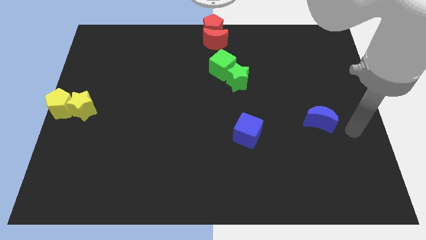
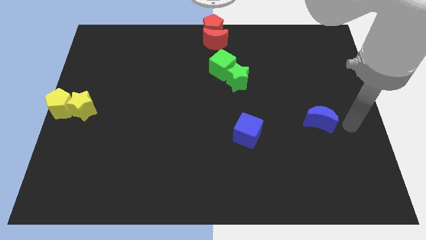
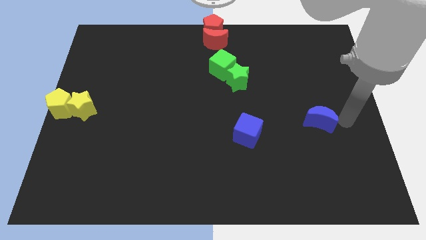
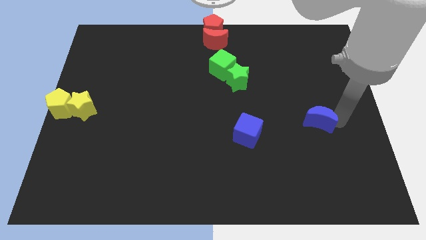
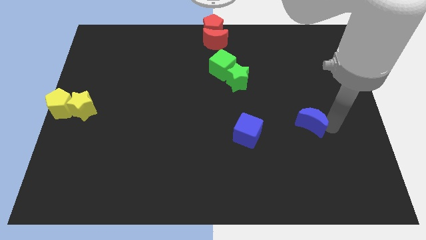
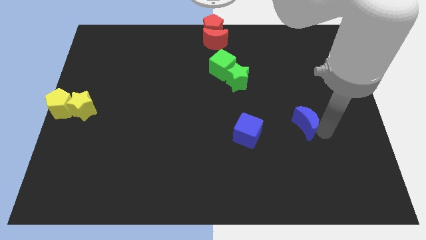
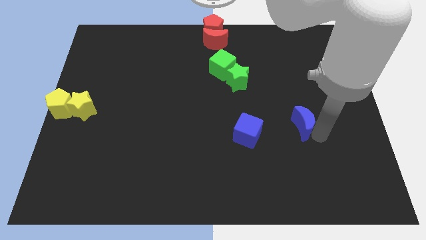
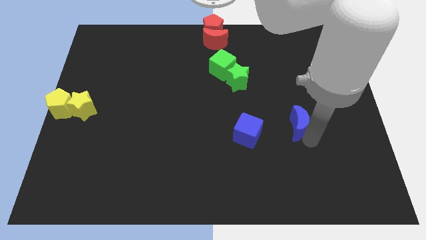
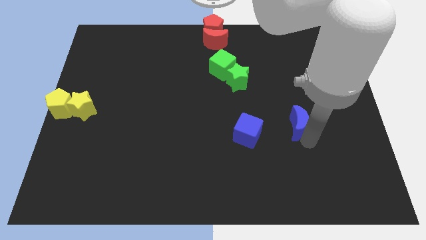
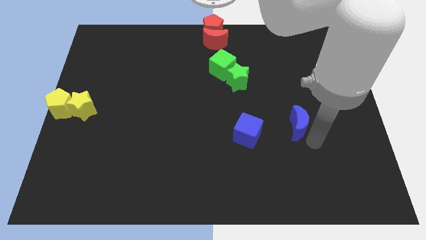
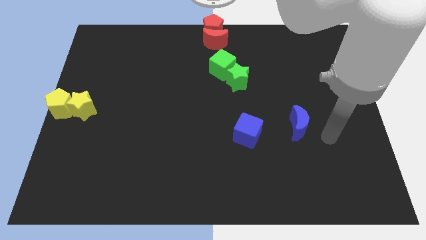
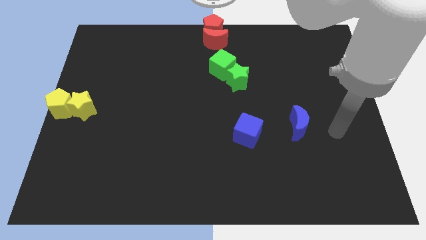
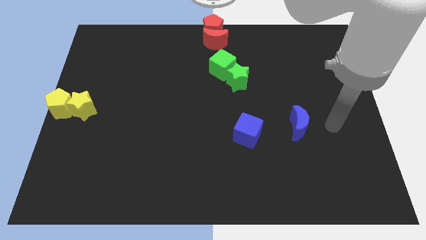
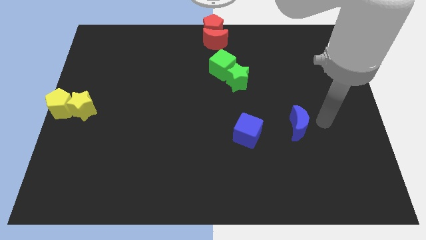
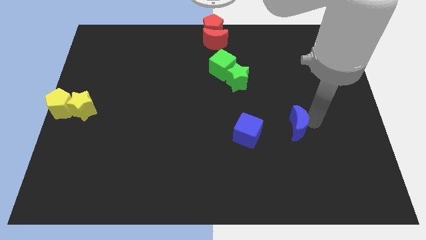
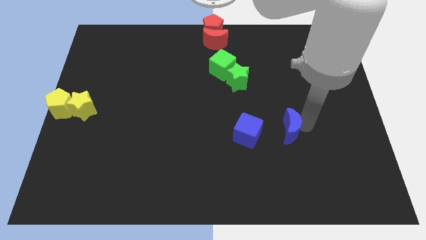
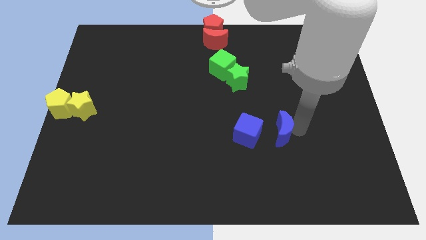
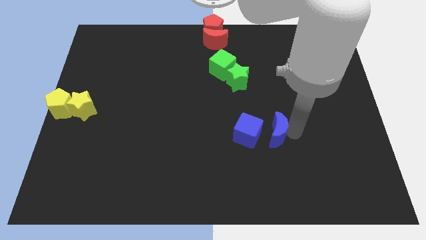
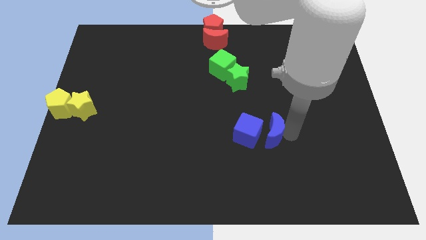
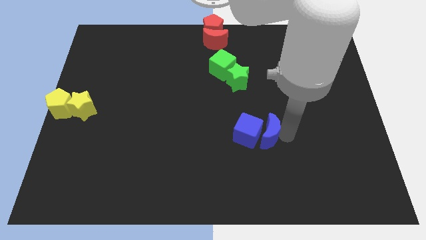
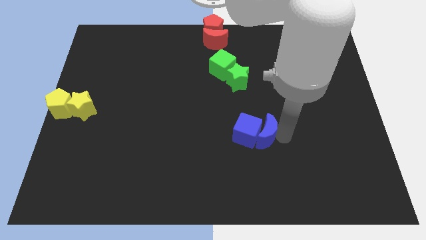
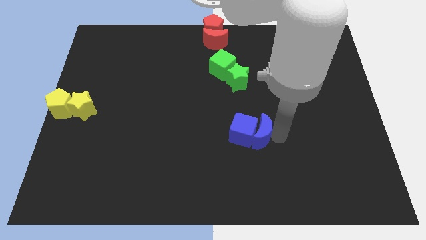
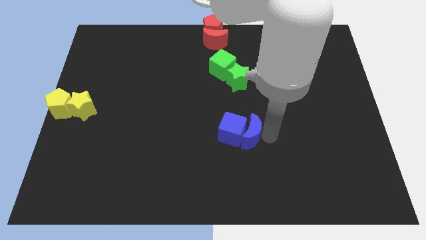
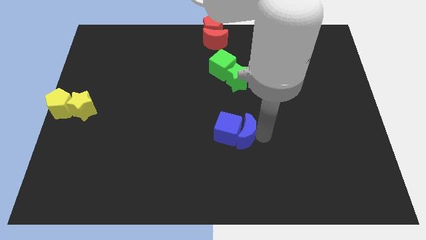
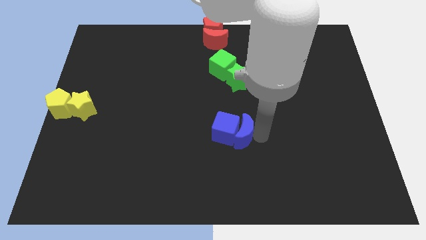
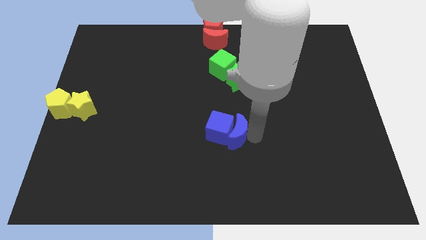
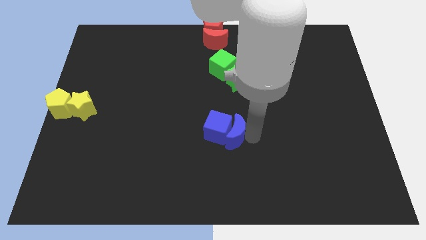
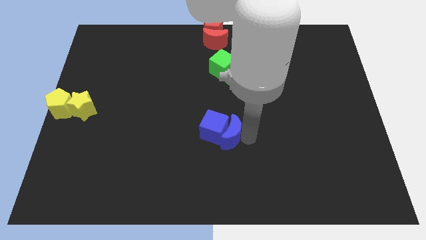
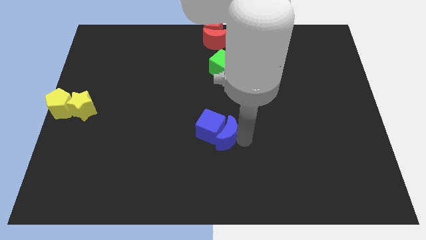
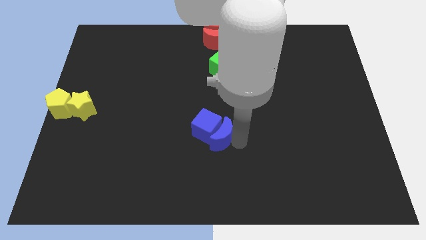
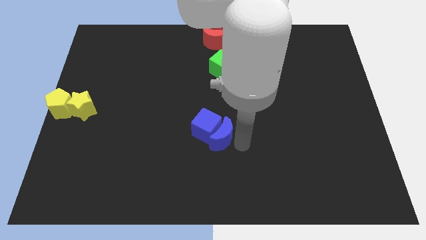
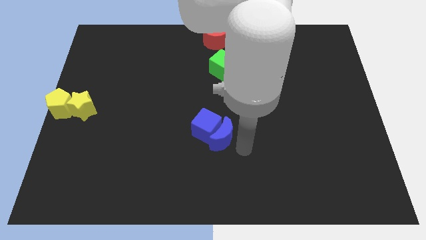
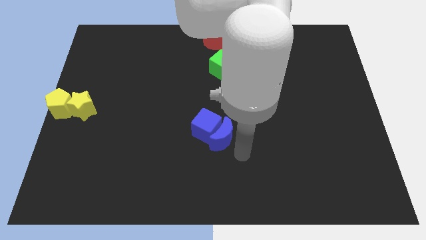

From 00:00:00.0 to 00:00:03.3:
push the blue crescent close to the blue cube

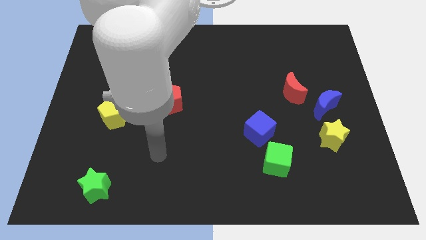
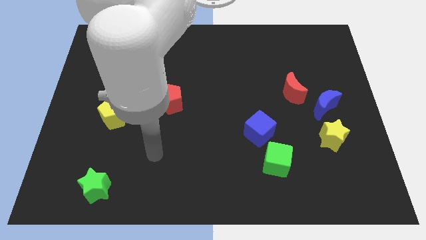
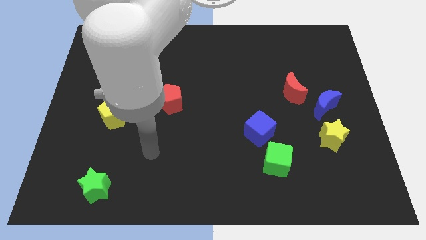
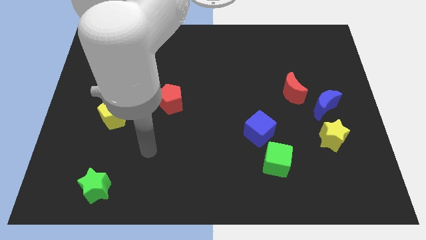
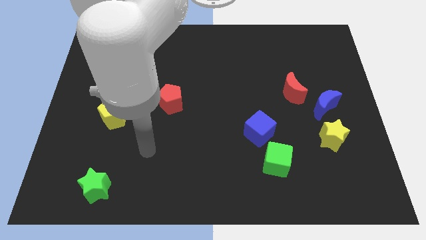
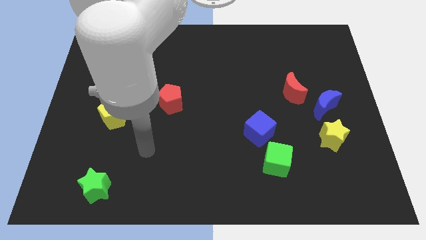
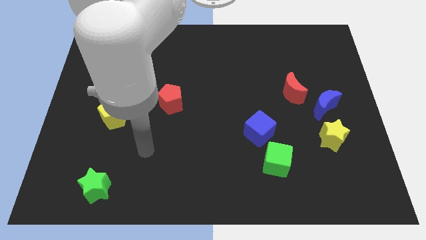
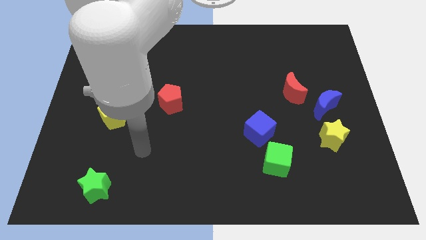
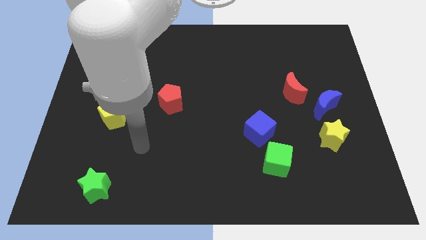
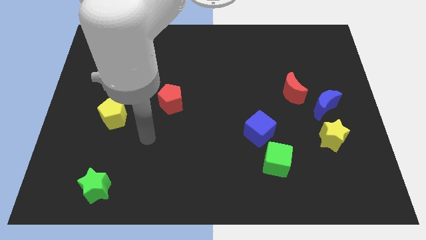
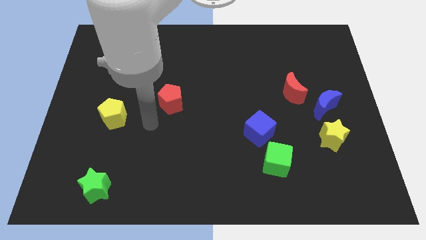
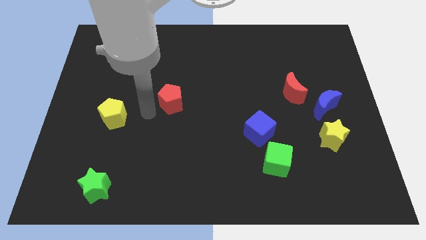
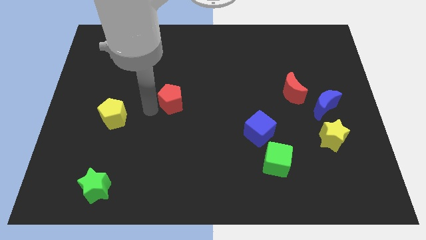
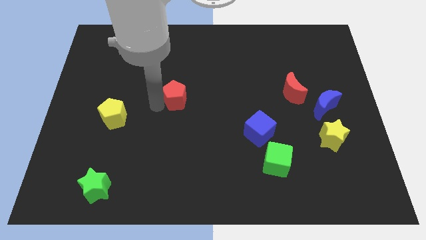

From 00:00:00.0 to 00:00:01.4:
touch the left side of the red pentagon

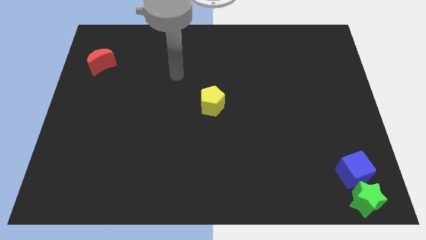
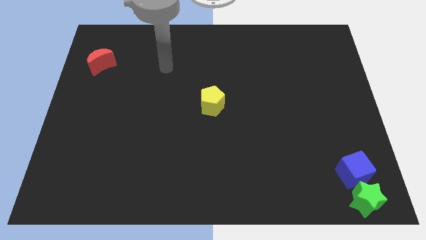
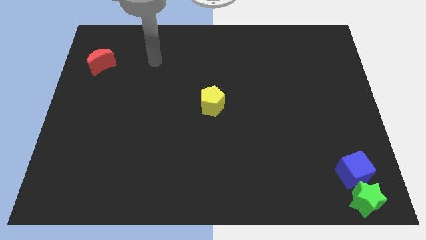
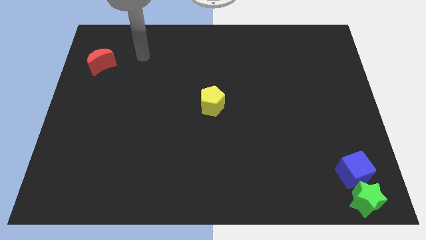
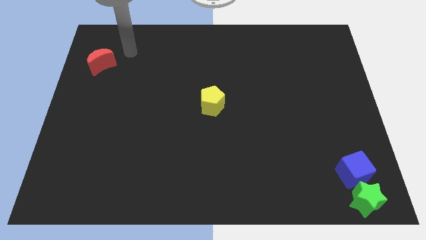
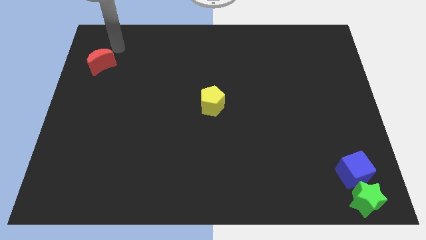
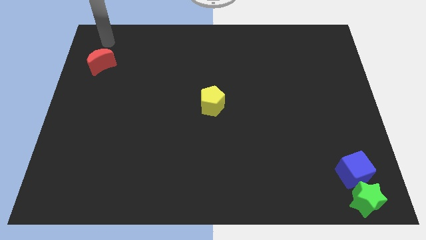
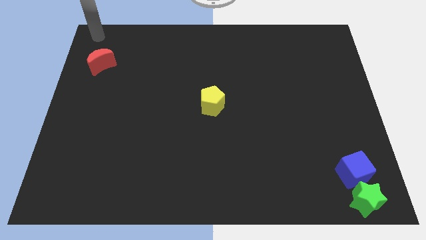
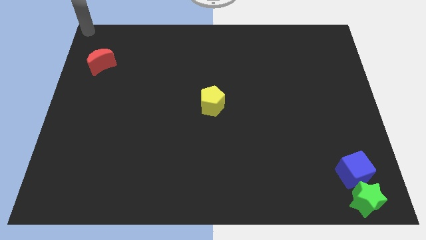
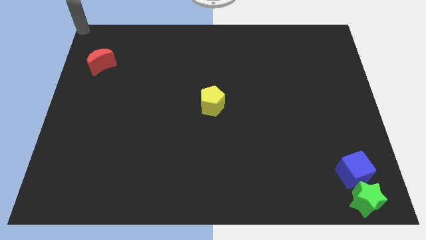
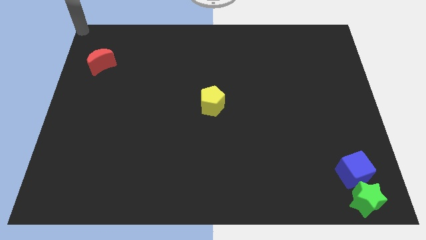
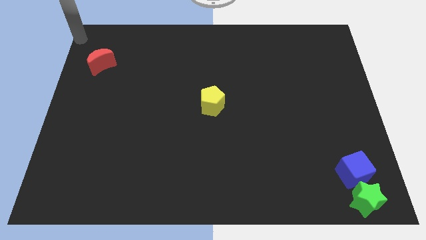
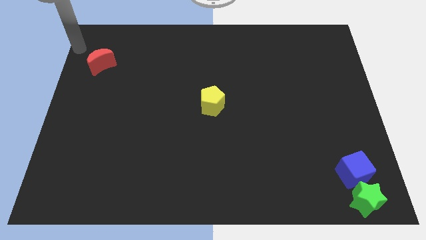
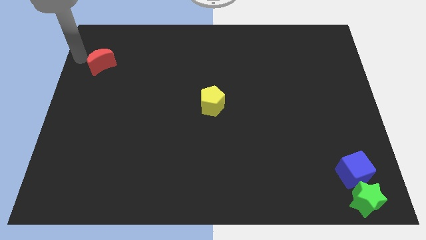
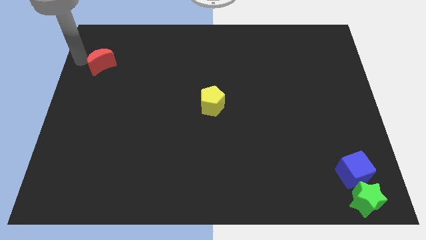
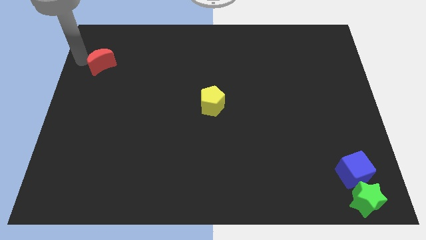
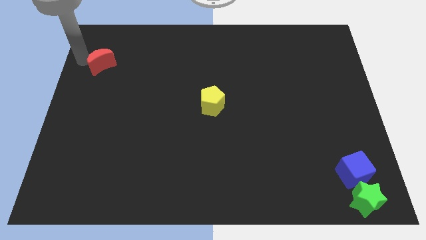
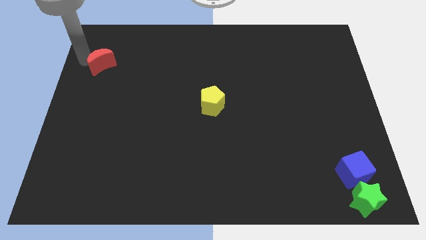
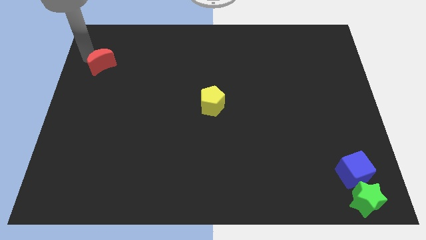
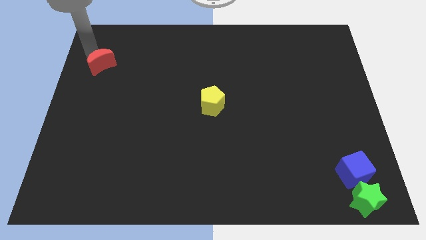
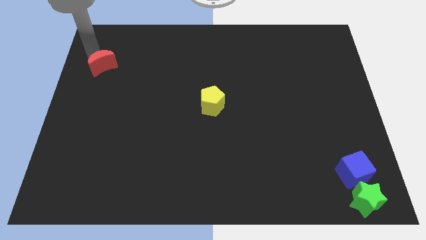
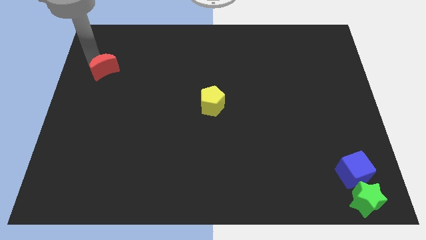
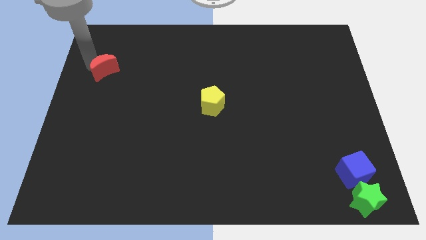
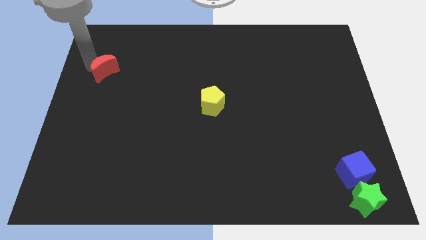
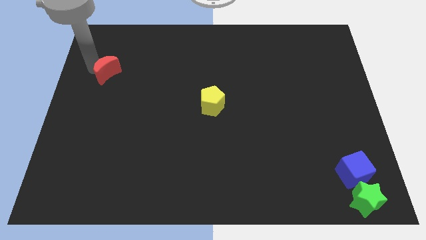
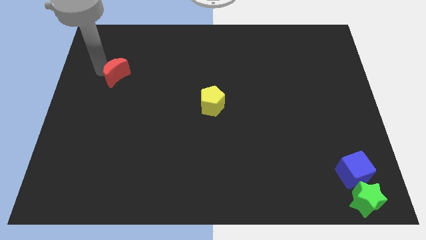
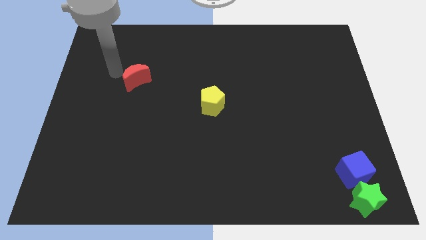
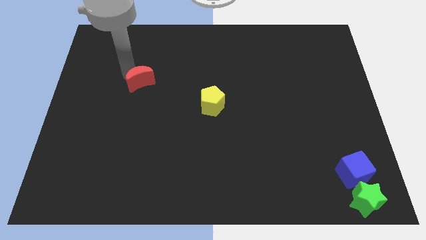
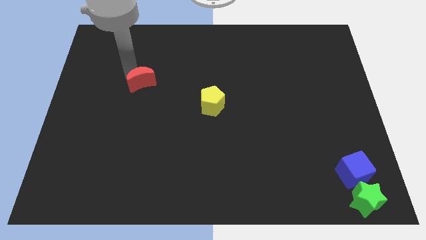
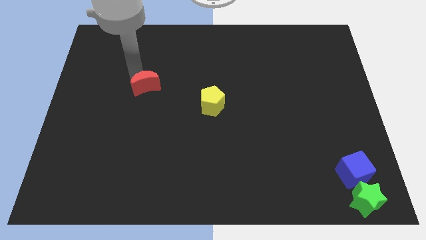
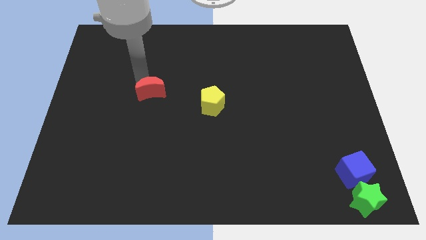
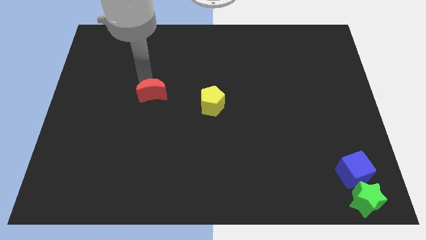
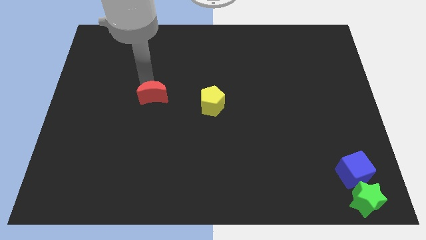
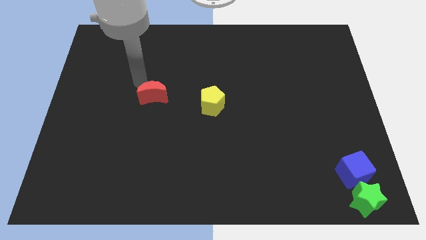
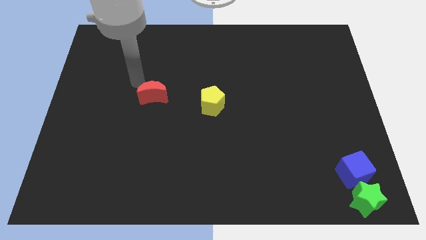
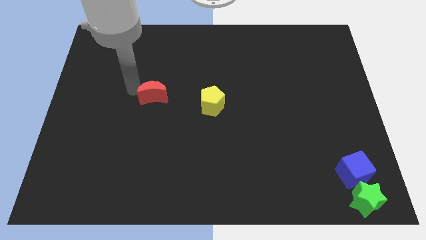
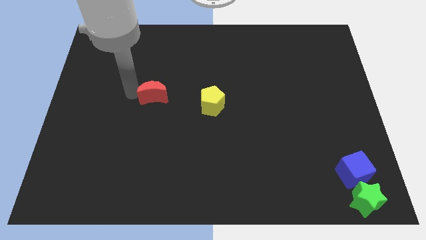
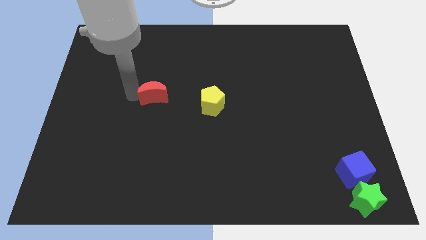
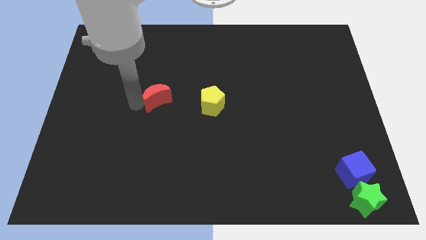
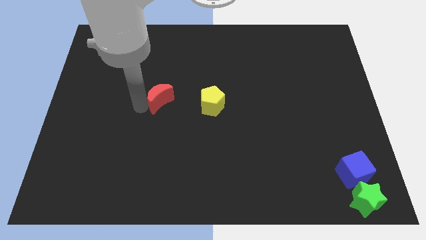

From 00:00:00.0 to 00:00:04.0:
place red crescent to the left of yellow pentagon

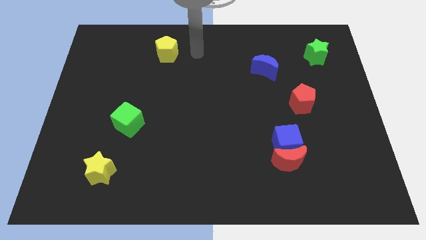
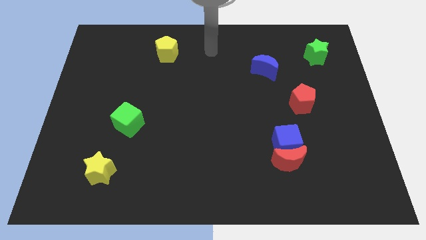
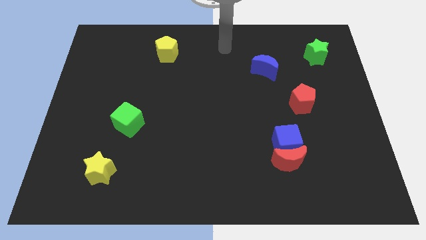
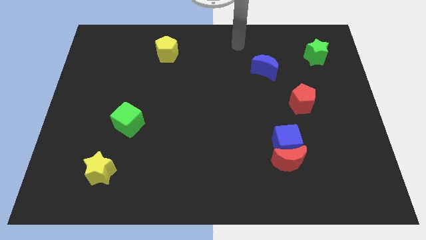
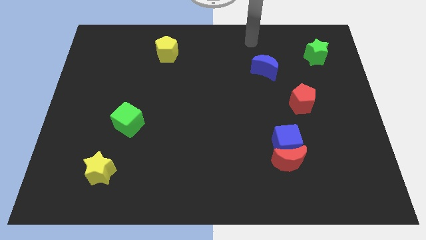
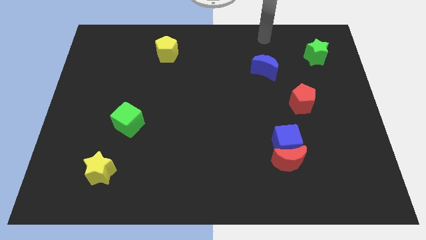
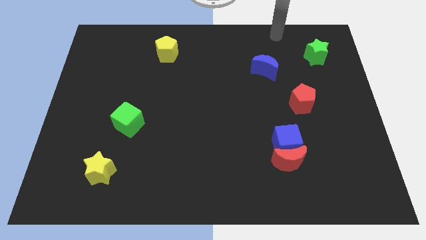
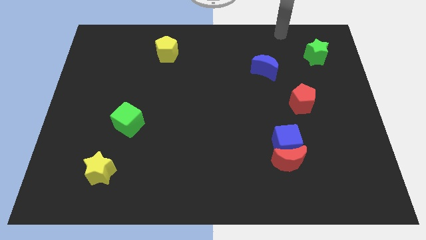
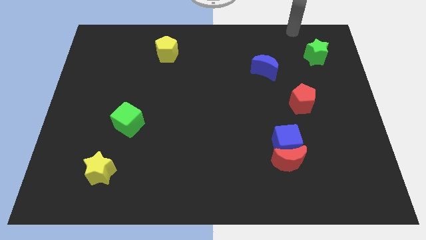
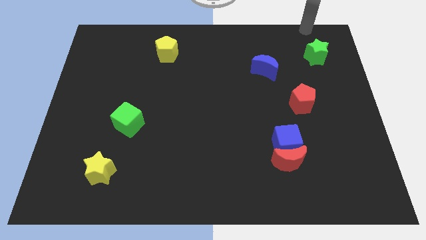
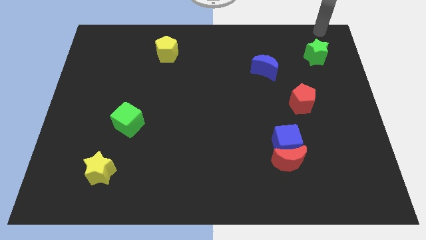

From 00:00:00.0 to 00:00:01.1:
point your arm at the top of the green cube
